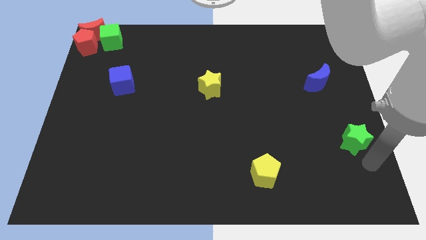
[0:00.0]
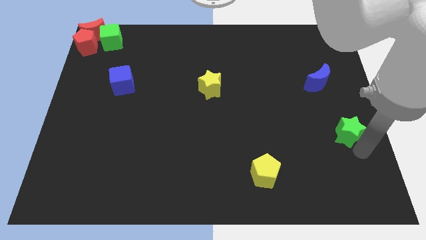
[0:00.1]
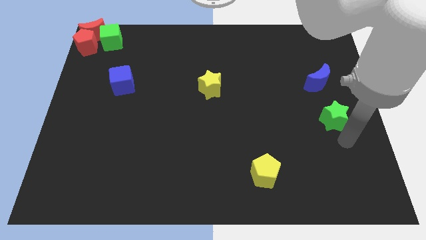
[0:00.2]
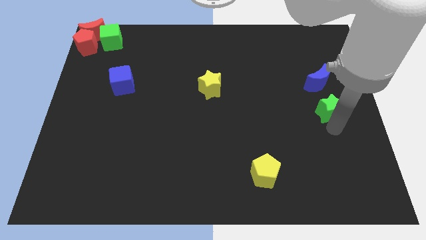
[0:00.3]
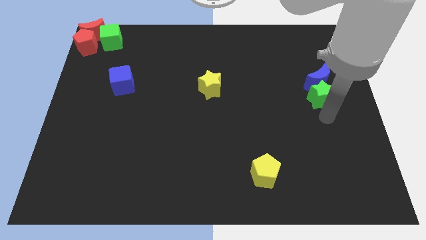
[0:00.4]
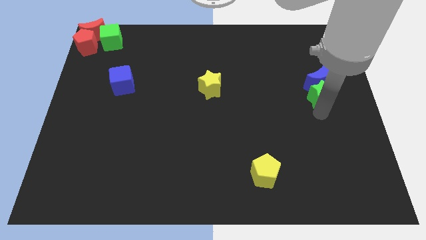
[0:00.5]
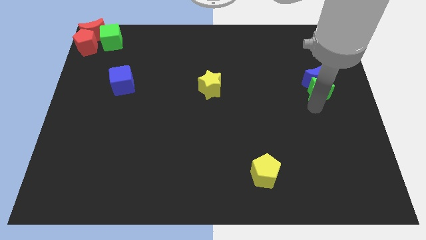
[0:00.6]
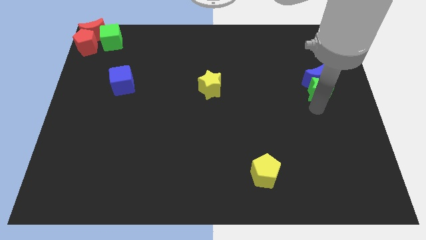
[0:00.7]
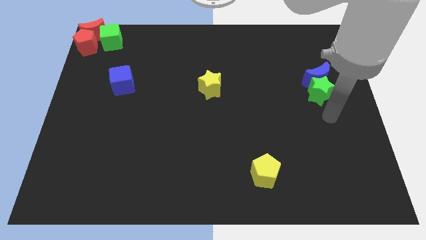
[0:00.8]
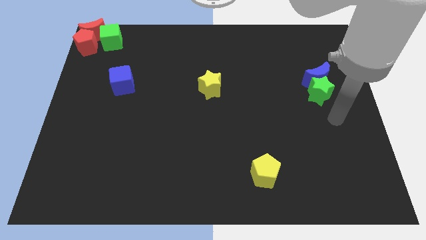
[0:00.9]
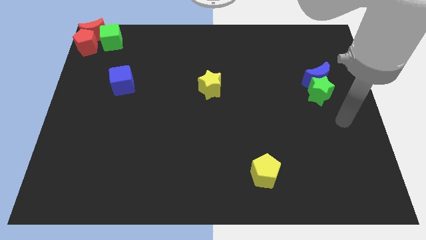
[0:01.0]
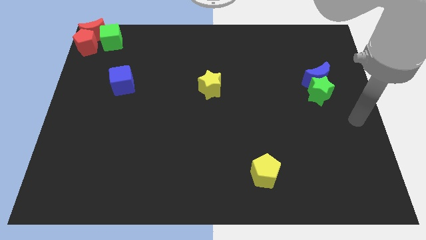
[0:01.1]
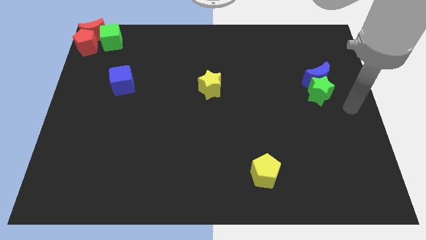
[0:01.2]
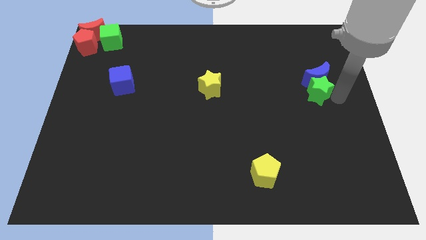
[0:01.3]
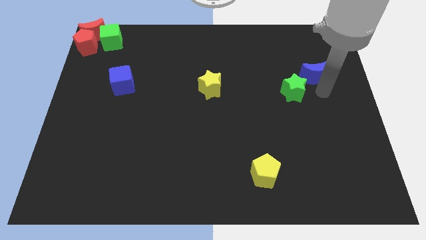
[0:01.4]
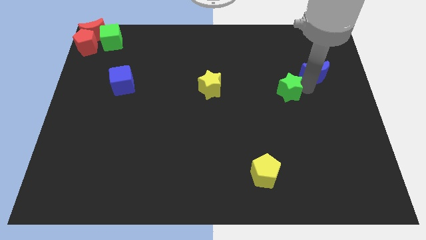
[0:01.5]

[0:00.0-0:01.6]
push the green star into the blue crescent

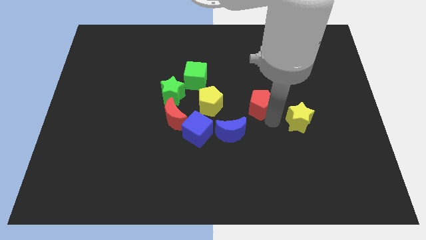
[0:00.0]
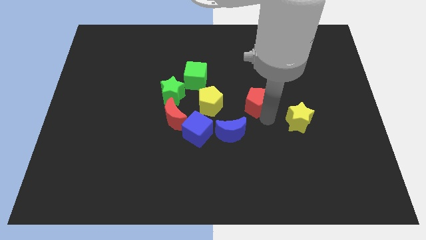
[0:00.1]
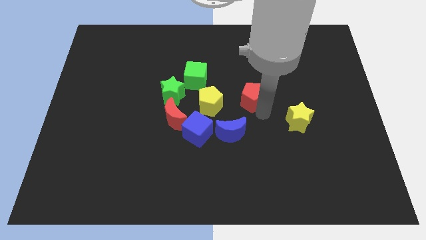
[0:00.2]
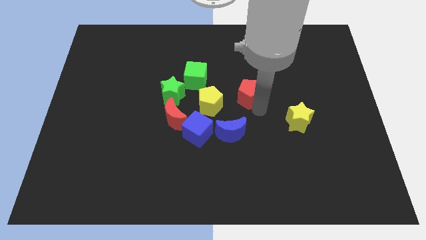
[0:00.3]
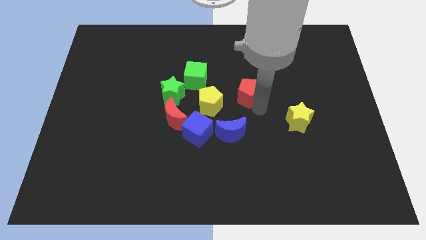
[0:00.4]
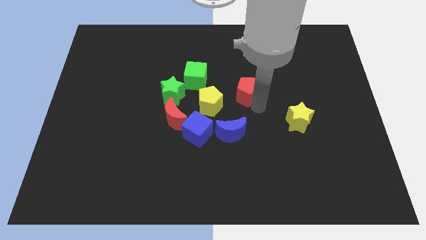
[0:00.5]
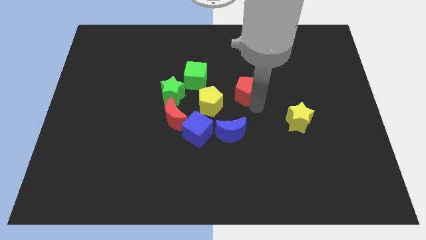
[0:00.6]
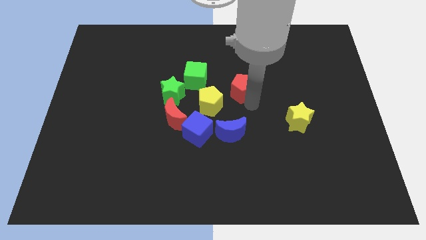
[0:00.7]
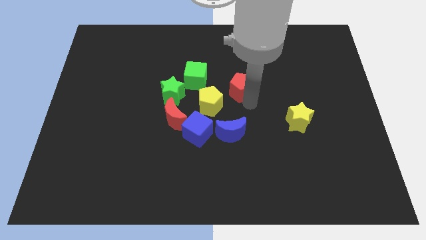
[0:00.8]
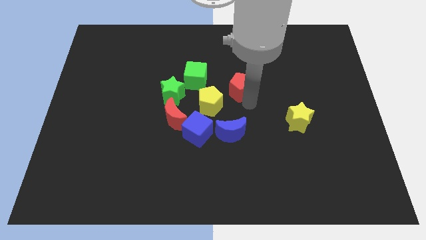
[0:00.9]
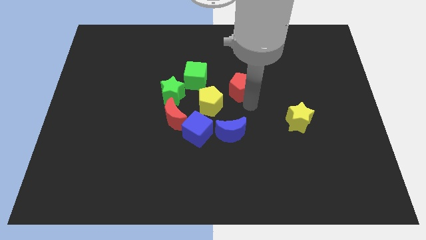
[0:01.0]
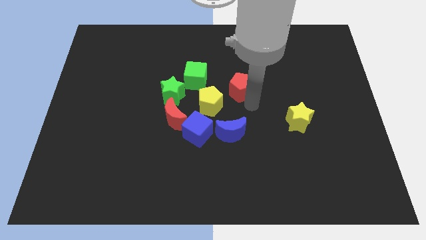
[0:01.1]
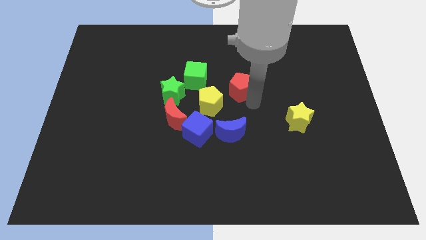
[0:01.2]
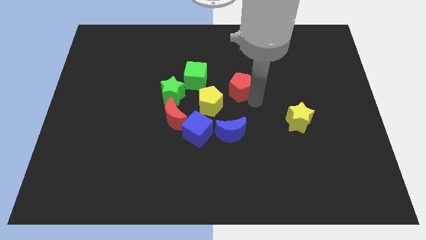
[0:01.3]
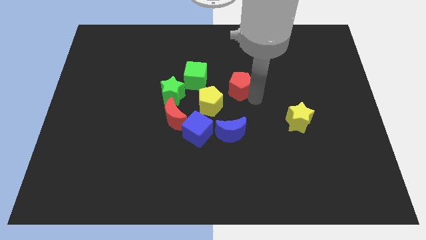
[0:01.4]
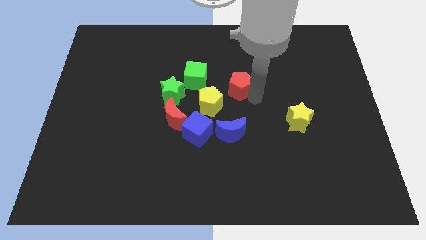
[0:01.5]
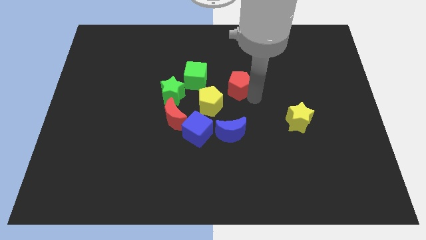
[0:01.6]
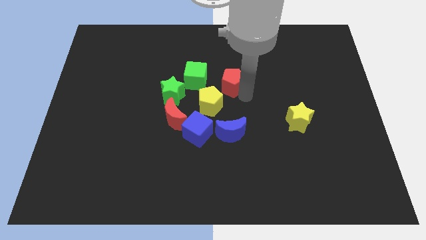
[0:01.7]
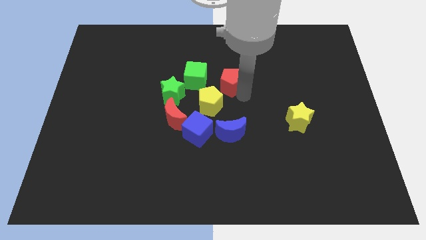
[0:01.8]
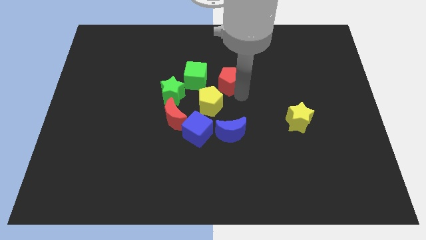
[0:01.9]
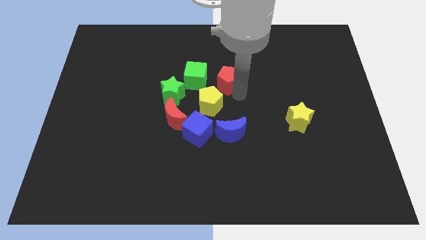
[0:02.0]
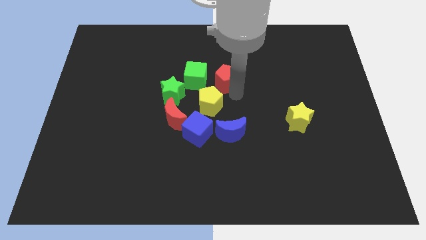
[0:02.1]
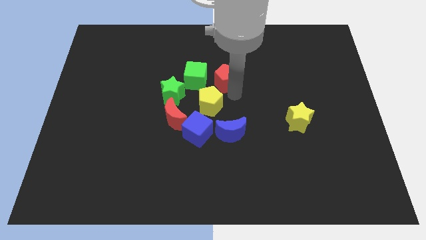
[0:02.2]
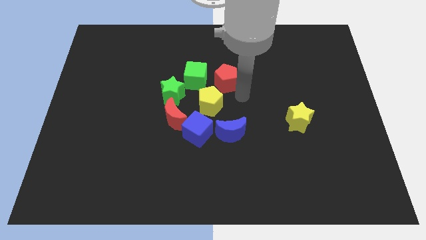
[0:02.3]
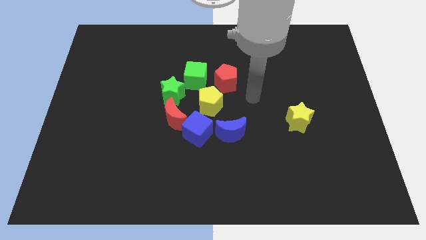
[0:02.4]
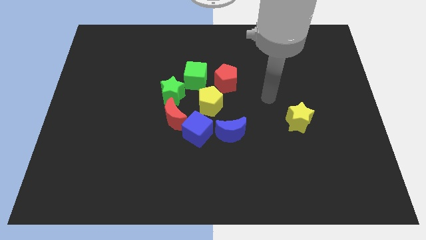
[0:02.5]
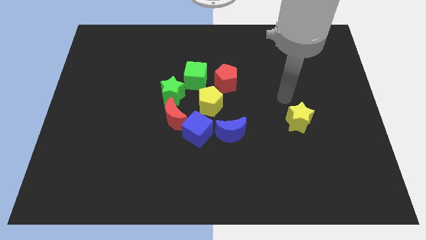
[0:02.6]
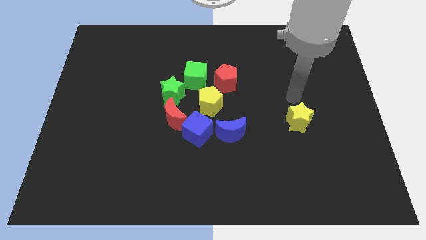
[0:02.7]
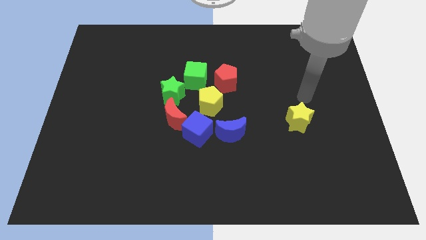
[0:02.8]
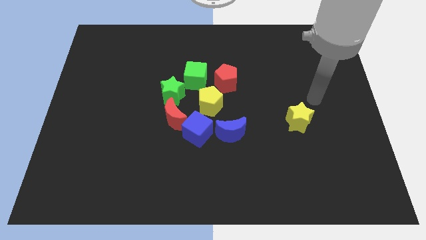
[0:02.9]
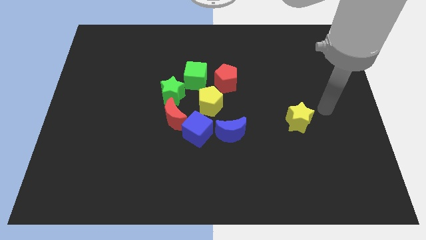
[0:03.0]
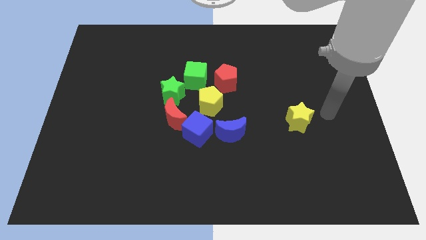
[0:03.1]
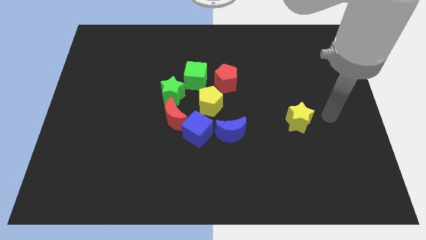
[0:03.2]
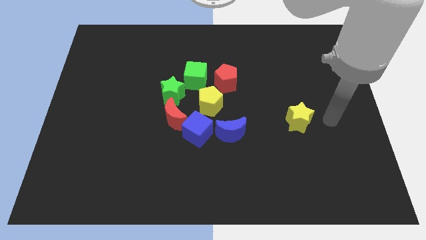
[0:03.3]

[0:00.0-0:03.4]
put the red pentagon on the right side of the green cube

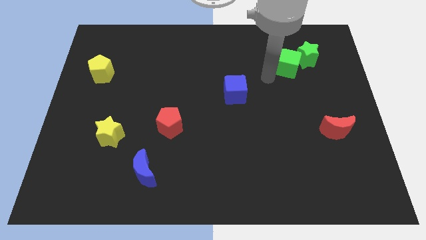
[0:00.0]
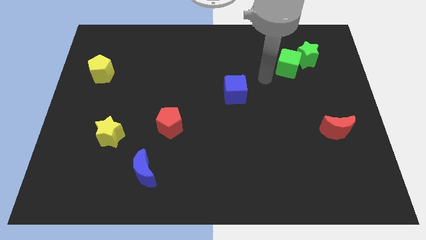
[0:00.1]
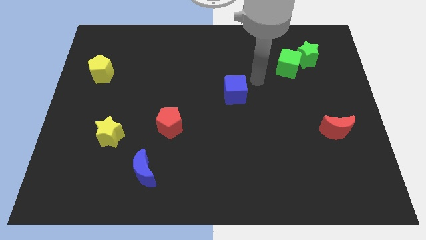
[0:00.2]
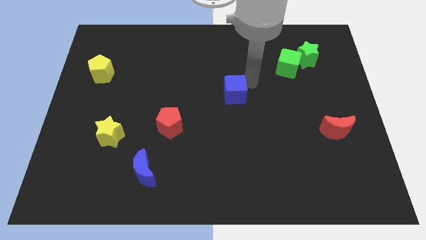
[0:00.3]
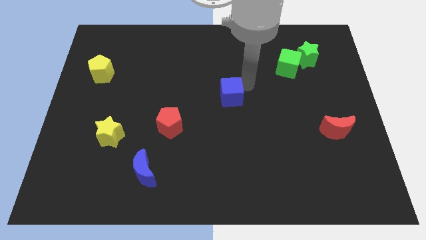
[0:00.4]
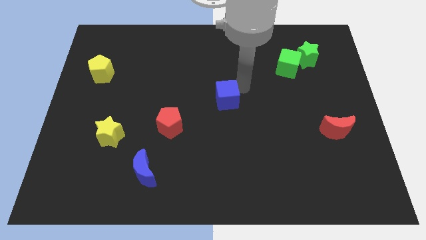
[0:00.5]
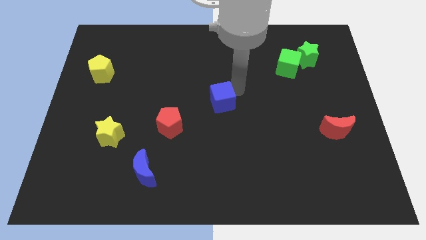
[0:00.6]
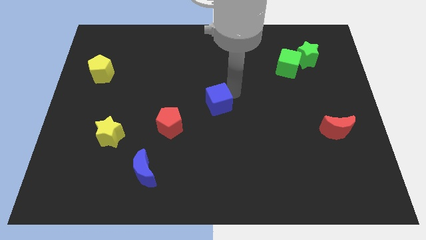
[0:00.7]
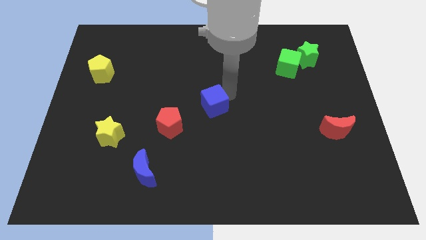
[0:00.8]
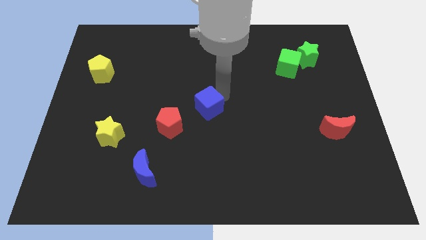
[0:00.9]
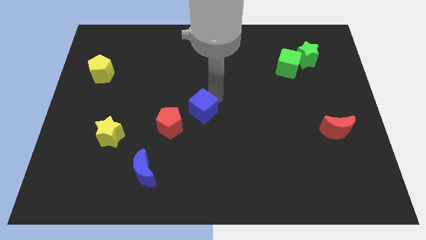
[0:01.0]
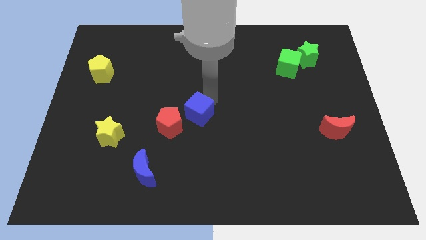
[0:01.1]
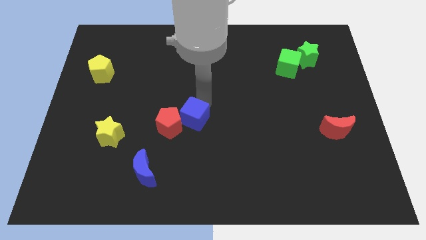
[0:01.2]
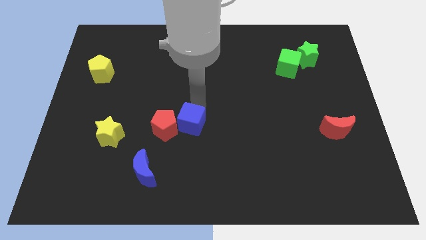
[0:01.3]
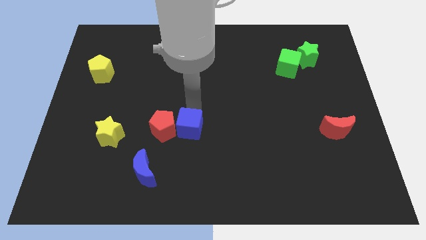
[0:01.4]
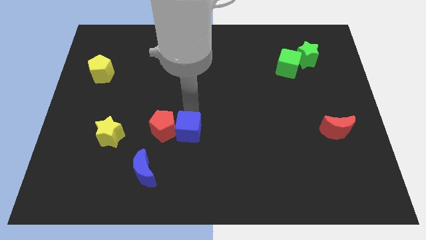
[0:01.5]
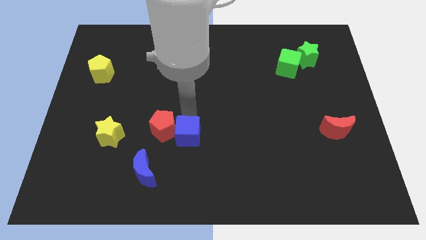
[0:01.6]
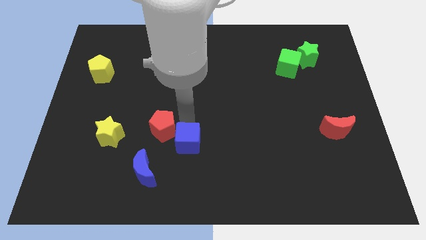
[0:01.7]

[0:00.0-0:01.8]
place the blue cube close to red pentagon

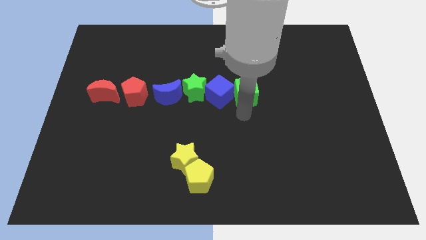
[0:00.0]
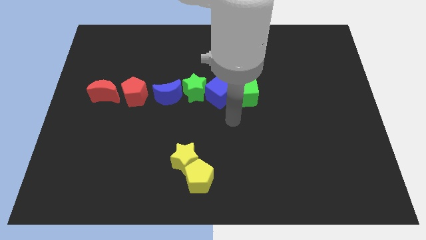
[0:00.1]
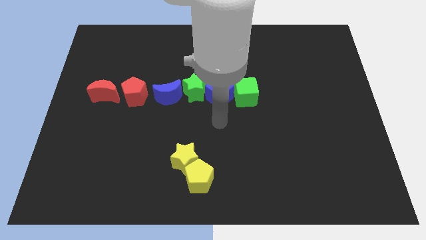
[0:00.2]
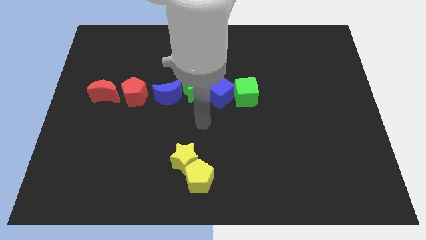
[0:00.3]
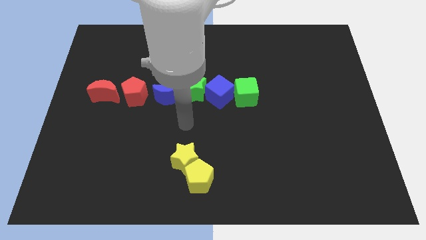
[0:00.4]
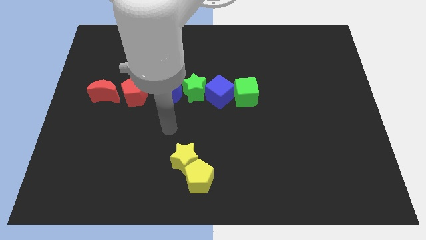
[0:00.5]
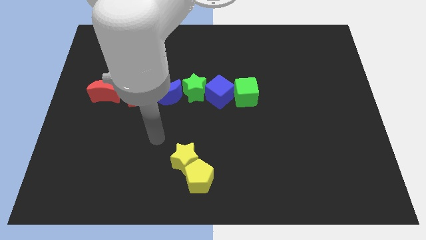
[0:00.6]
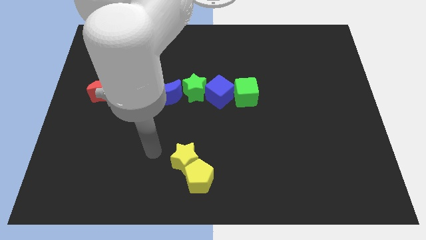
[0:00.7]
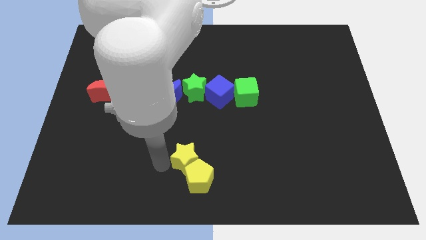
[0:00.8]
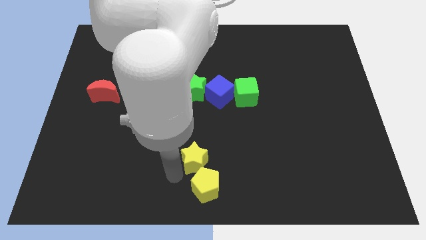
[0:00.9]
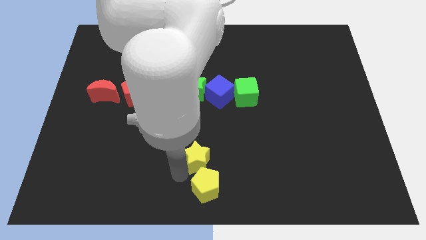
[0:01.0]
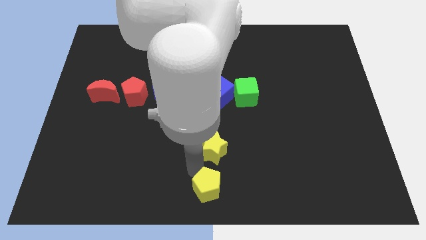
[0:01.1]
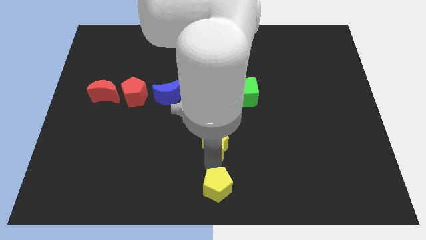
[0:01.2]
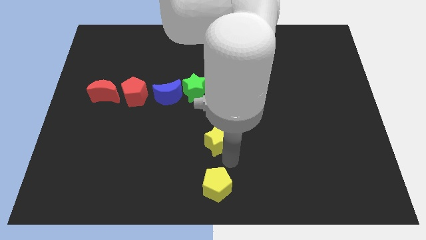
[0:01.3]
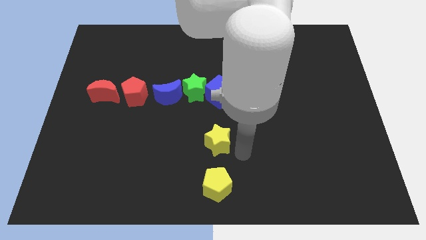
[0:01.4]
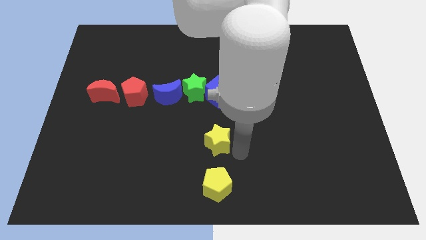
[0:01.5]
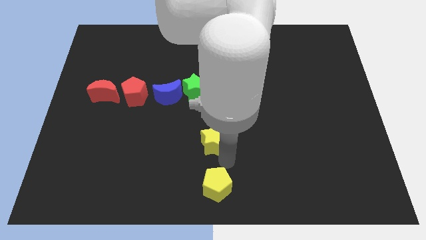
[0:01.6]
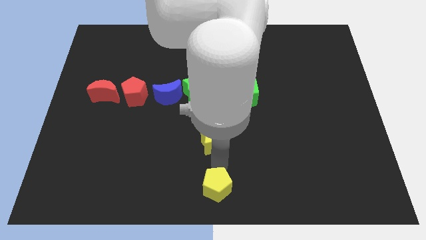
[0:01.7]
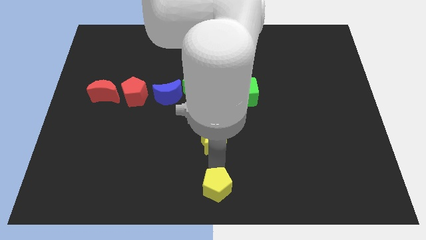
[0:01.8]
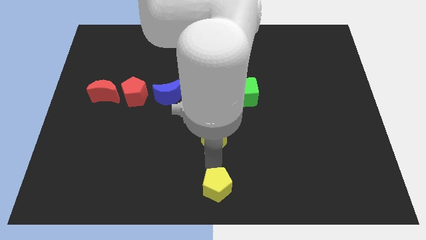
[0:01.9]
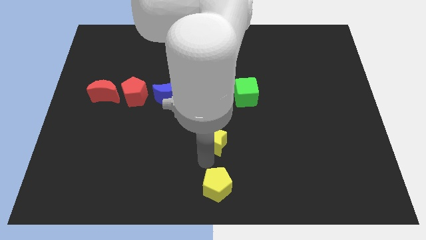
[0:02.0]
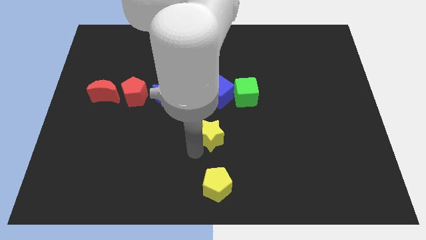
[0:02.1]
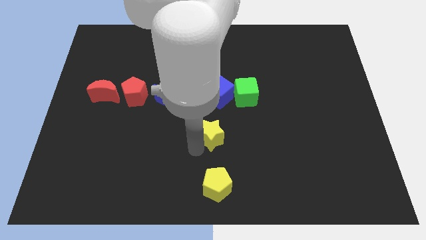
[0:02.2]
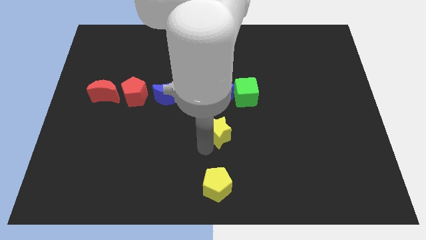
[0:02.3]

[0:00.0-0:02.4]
separate the yellow star from yellow pentagon
